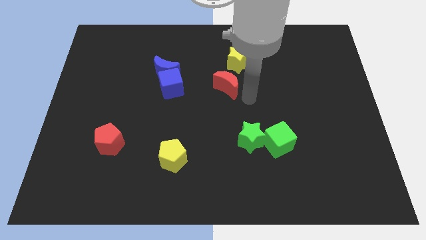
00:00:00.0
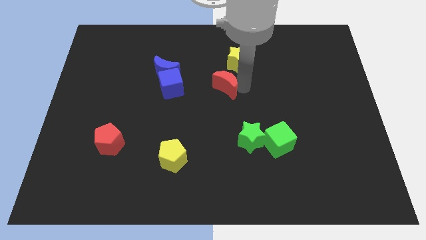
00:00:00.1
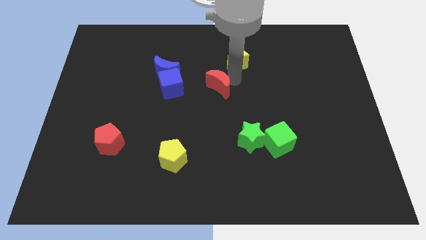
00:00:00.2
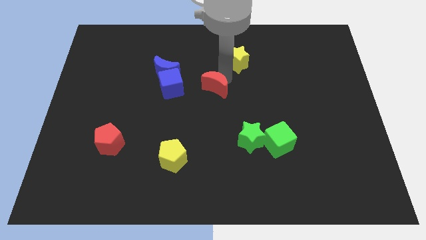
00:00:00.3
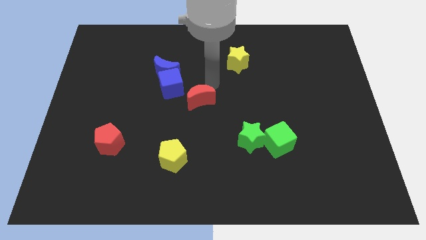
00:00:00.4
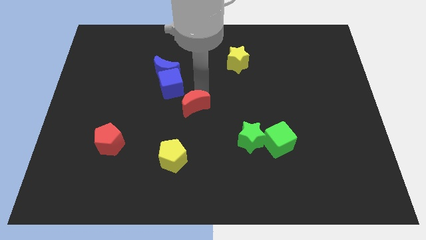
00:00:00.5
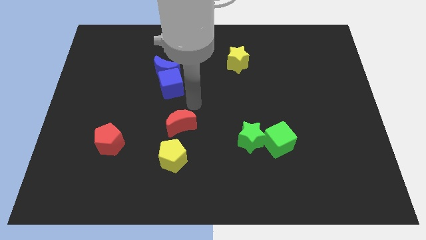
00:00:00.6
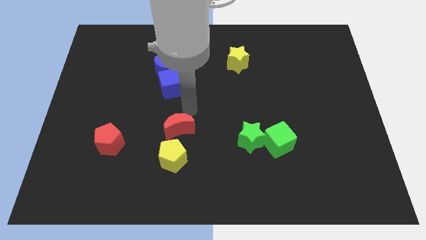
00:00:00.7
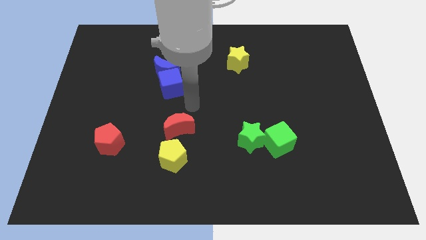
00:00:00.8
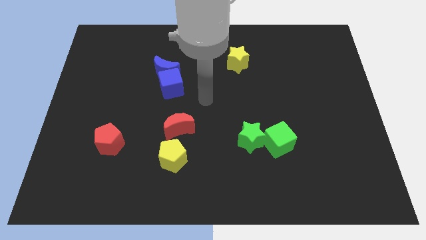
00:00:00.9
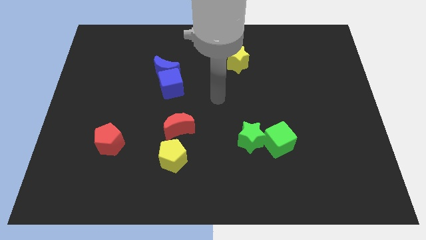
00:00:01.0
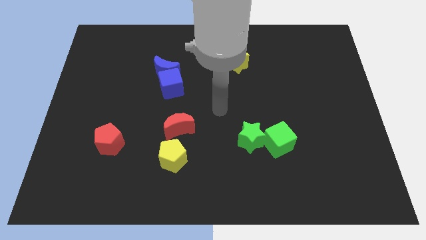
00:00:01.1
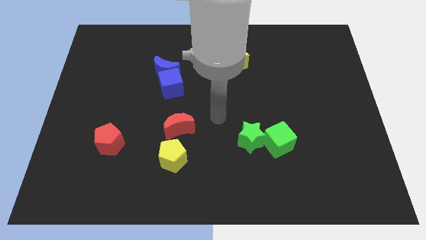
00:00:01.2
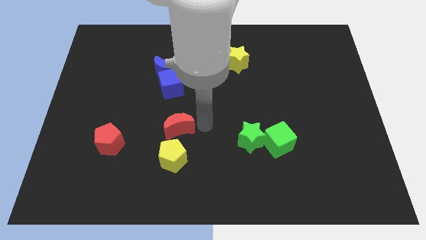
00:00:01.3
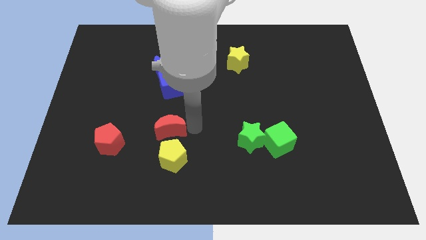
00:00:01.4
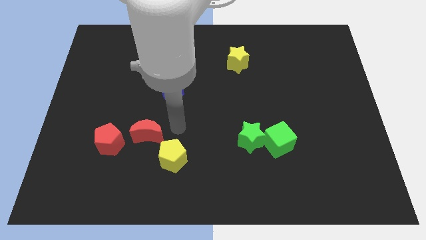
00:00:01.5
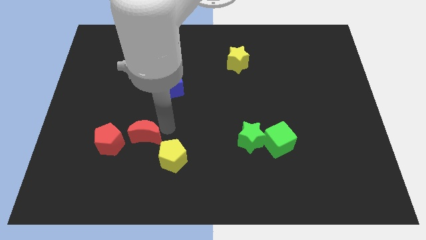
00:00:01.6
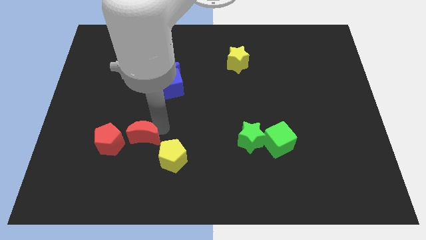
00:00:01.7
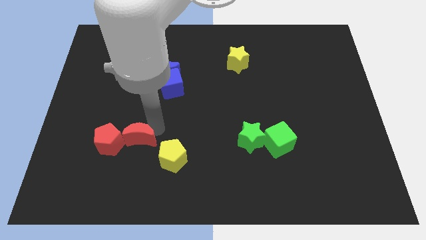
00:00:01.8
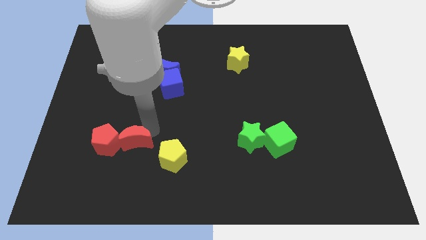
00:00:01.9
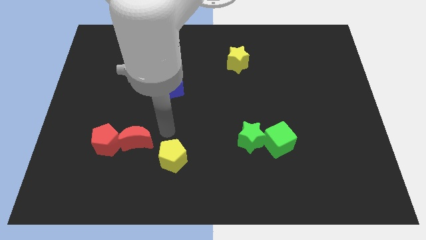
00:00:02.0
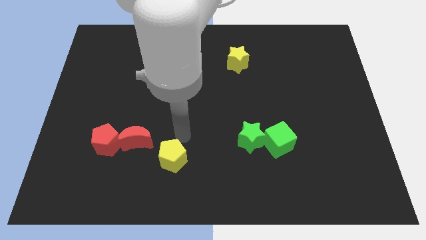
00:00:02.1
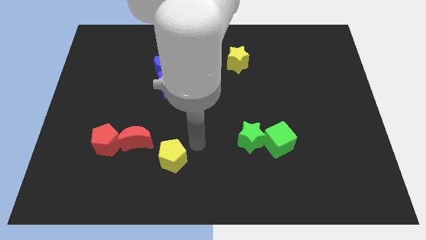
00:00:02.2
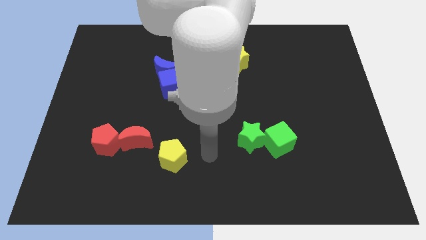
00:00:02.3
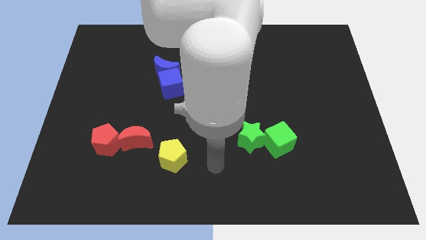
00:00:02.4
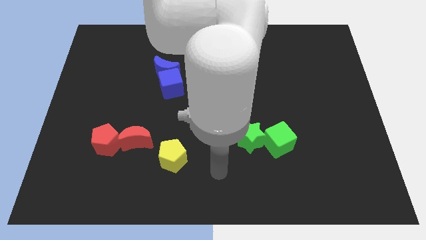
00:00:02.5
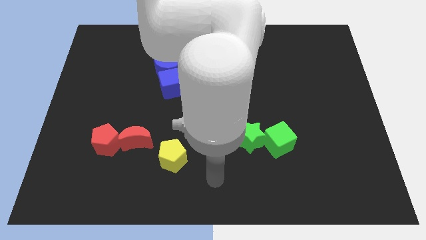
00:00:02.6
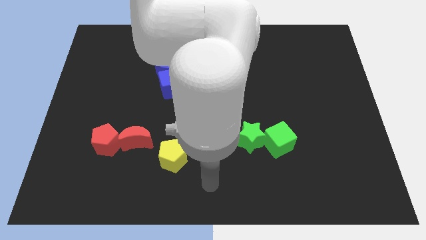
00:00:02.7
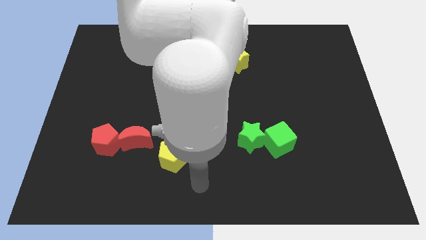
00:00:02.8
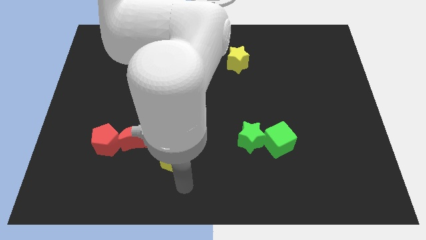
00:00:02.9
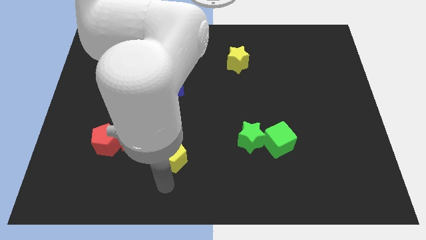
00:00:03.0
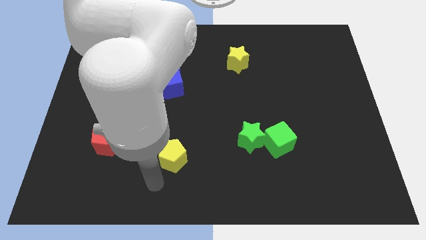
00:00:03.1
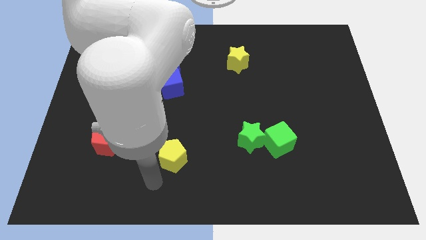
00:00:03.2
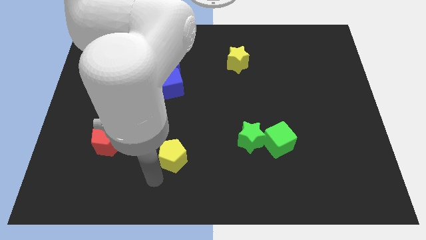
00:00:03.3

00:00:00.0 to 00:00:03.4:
slide the red crescent to the right side of the red pentagon

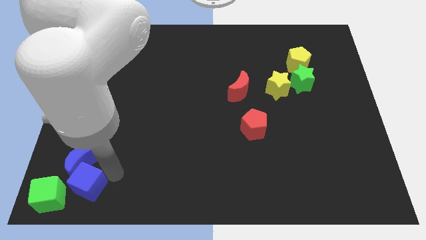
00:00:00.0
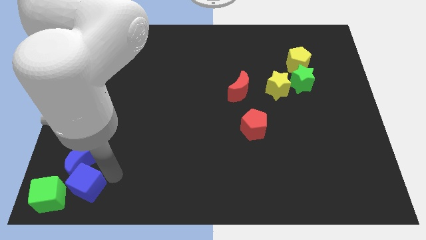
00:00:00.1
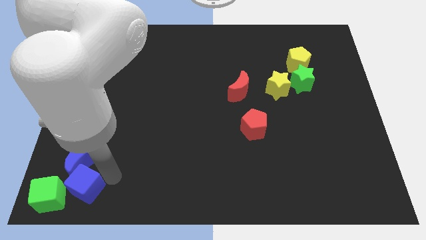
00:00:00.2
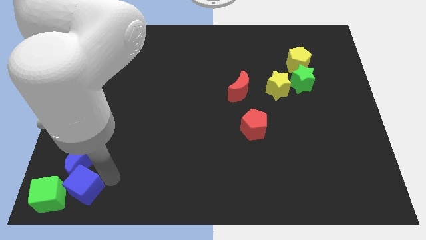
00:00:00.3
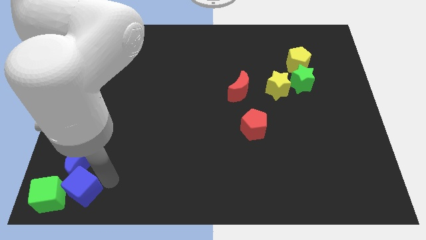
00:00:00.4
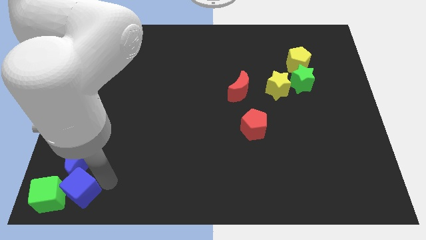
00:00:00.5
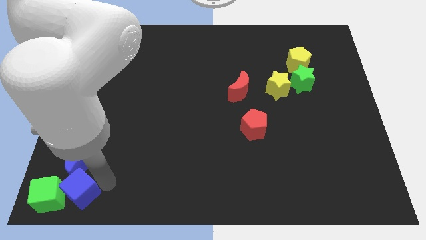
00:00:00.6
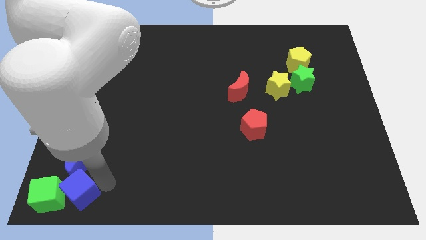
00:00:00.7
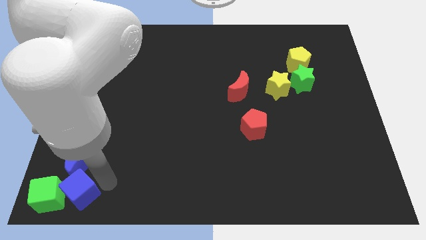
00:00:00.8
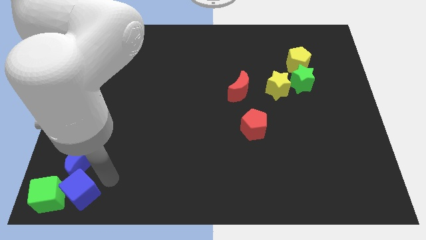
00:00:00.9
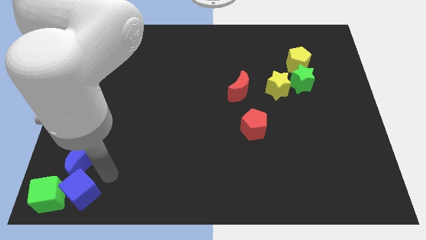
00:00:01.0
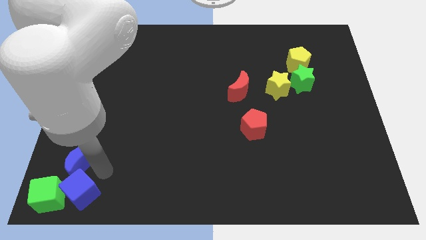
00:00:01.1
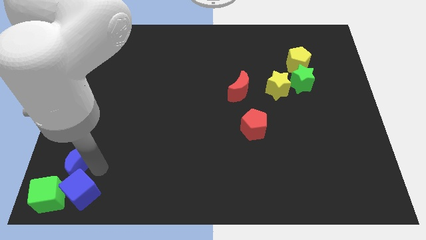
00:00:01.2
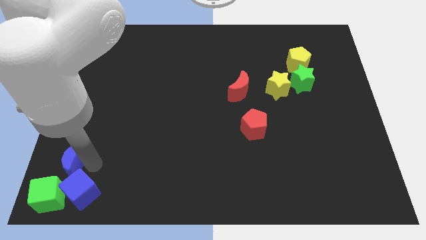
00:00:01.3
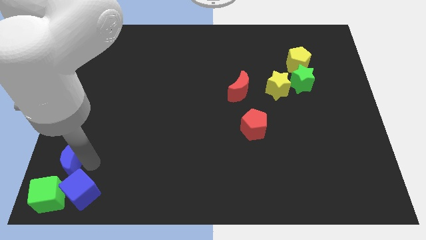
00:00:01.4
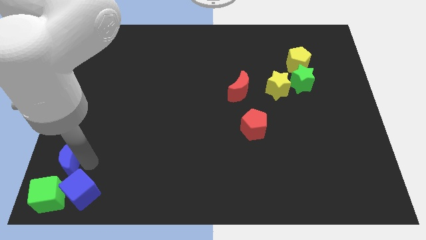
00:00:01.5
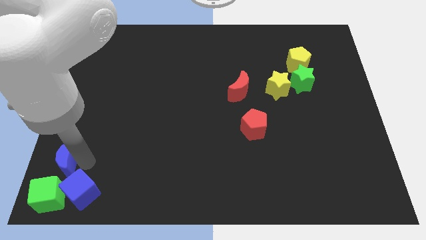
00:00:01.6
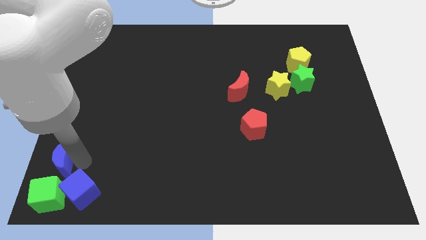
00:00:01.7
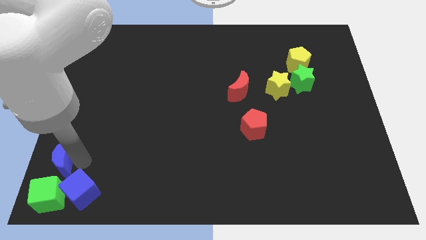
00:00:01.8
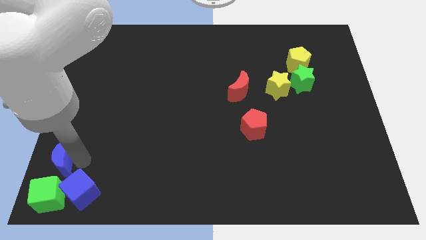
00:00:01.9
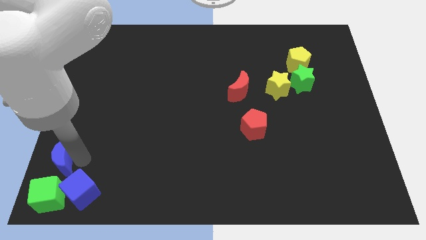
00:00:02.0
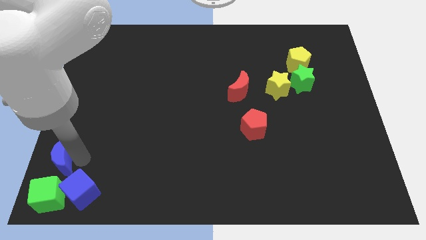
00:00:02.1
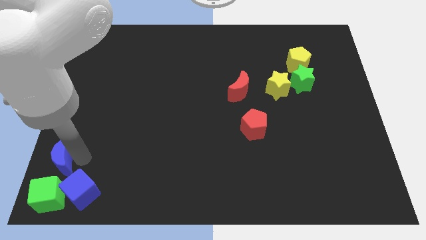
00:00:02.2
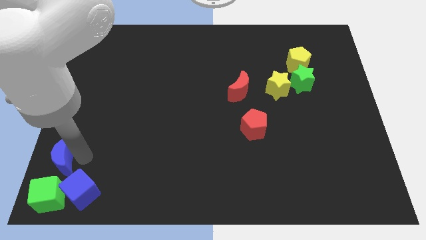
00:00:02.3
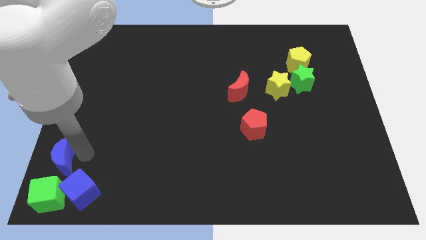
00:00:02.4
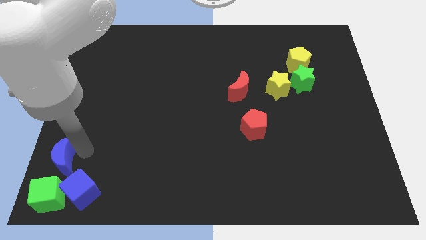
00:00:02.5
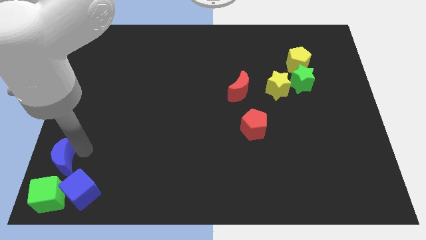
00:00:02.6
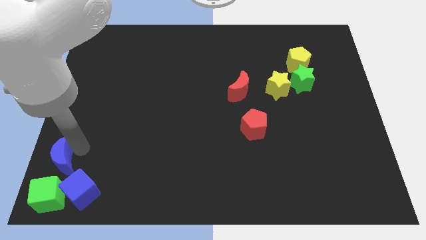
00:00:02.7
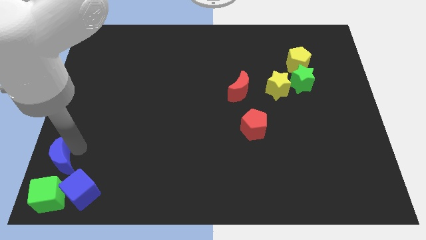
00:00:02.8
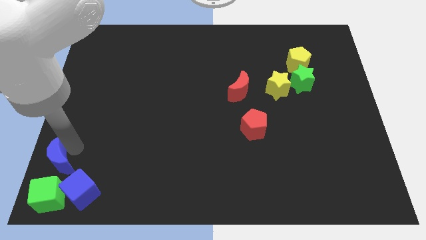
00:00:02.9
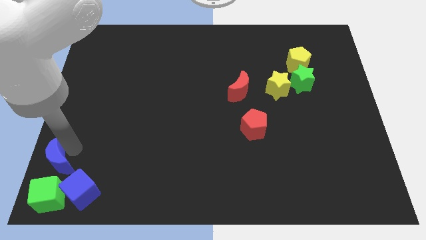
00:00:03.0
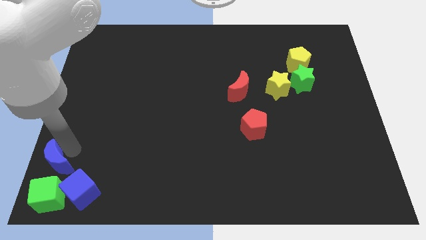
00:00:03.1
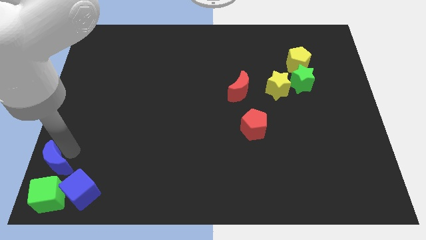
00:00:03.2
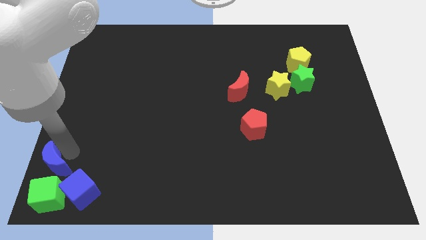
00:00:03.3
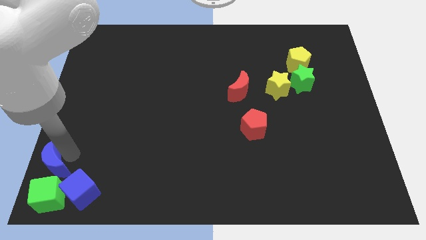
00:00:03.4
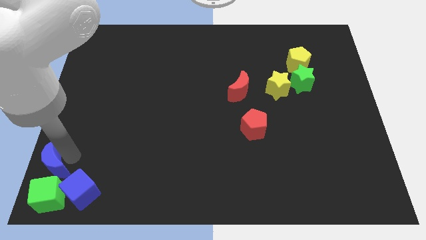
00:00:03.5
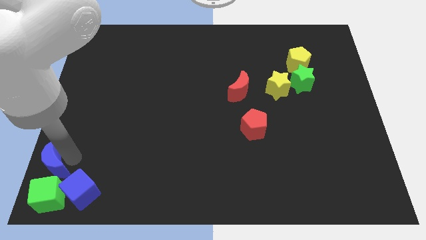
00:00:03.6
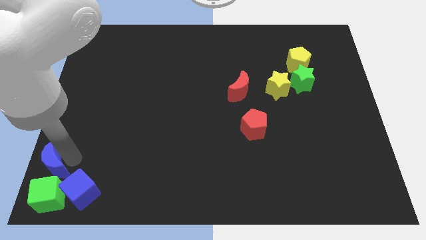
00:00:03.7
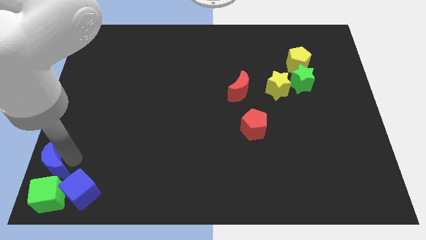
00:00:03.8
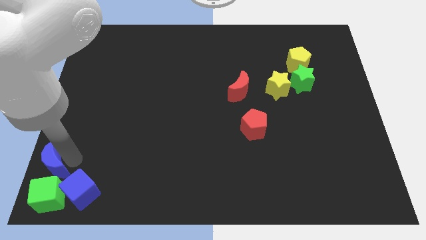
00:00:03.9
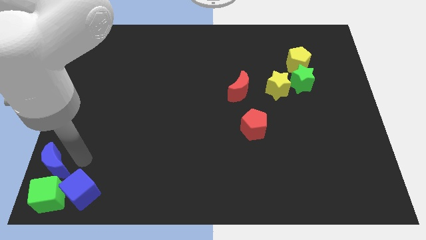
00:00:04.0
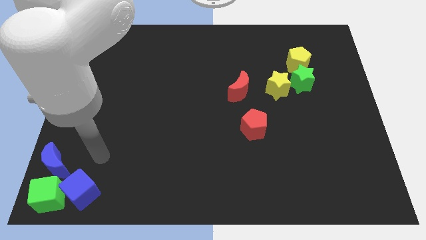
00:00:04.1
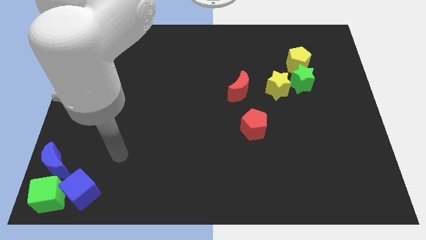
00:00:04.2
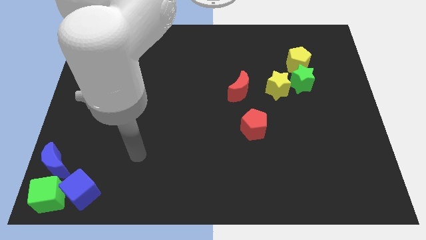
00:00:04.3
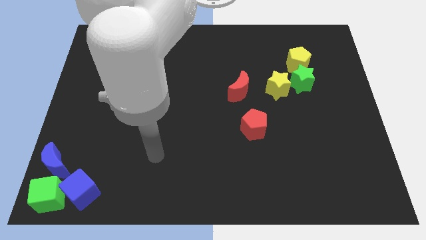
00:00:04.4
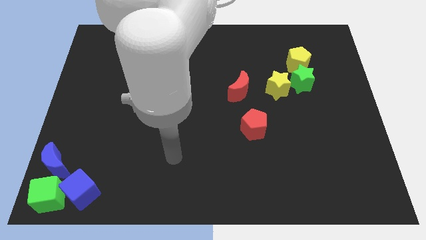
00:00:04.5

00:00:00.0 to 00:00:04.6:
move the blue cube and blue moon near to the green cube towards the bottom left

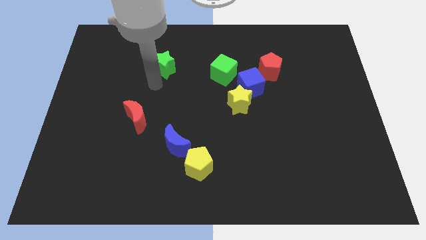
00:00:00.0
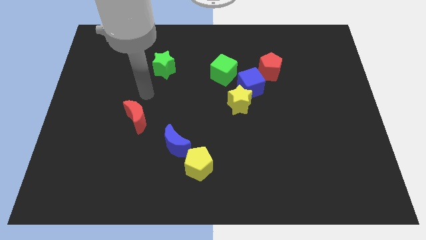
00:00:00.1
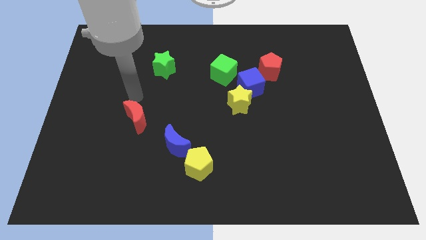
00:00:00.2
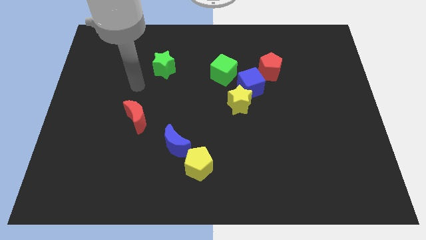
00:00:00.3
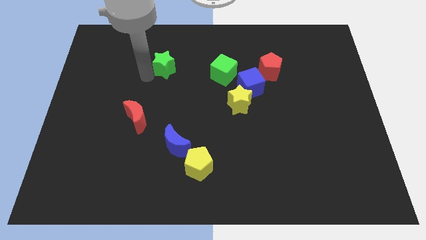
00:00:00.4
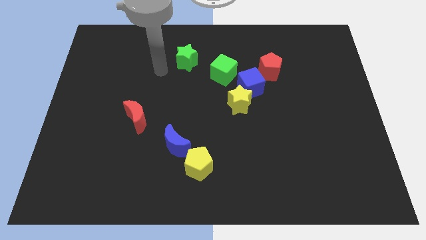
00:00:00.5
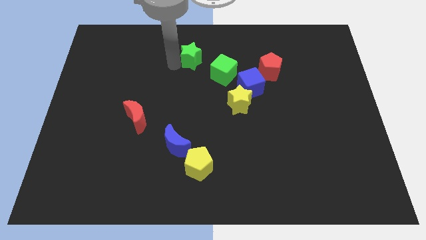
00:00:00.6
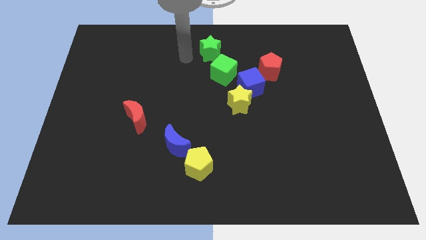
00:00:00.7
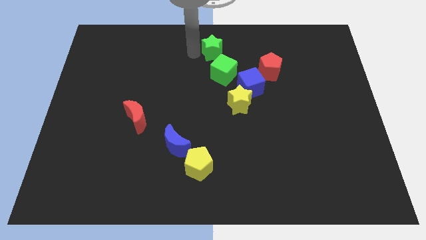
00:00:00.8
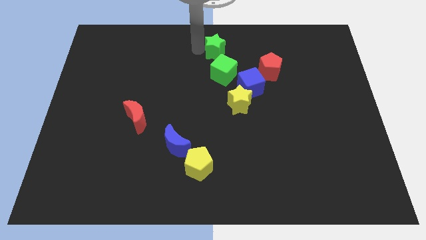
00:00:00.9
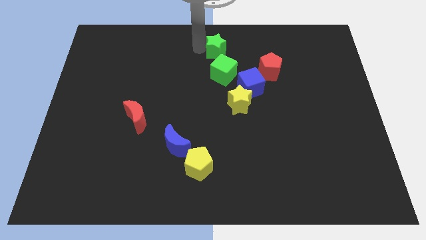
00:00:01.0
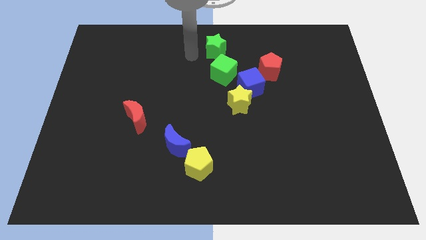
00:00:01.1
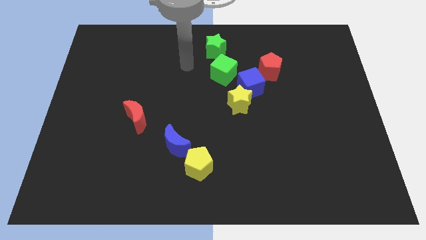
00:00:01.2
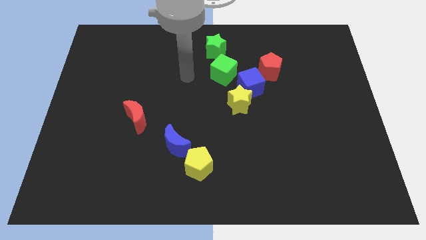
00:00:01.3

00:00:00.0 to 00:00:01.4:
move the green star vertically to the top of the green cube
